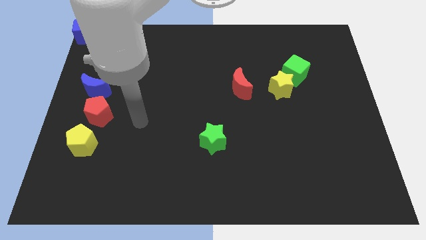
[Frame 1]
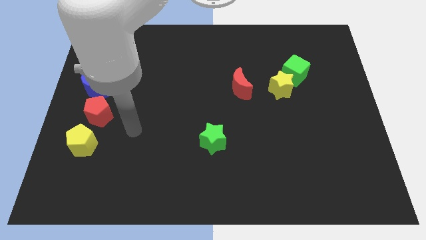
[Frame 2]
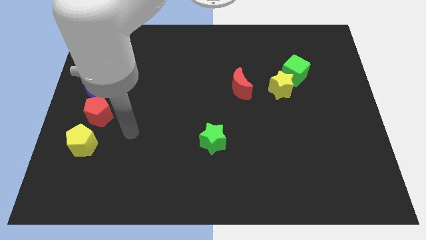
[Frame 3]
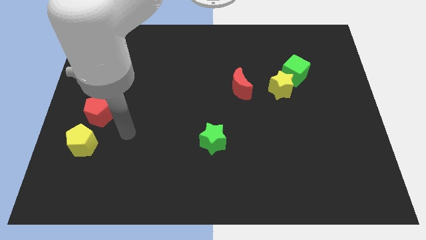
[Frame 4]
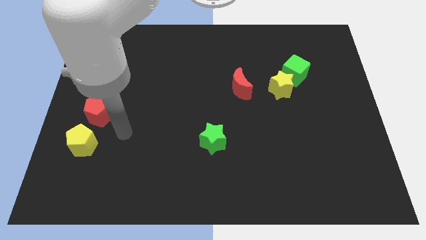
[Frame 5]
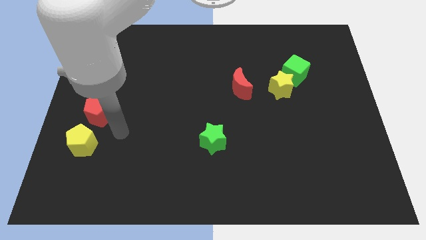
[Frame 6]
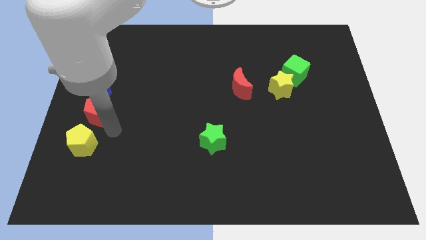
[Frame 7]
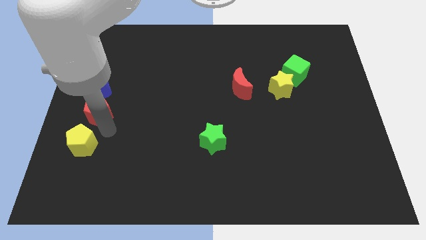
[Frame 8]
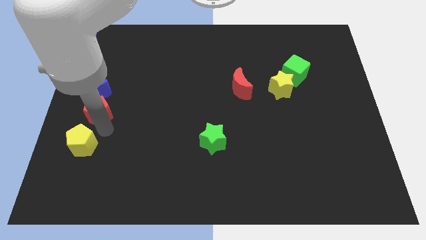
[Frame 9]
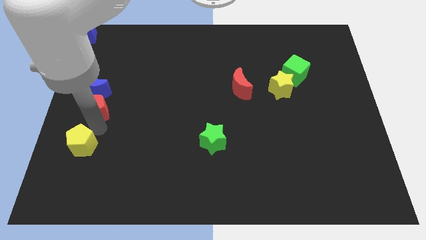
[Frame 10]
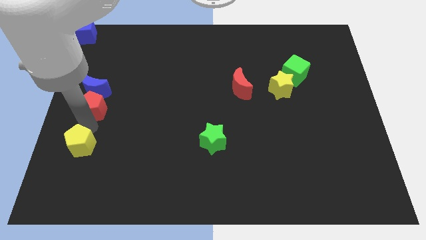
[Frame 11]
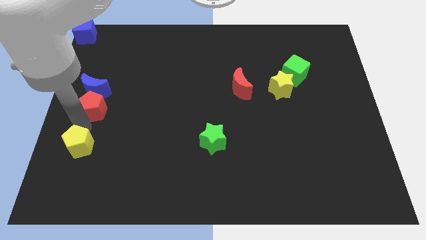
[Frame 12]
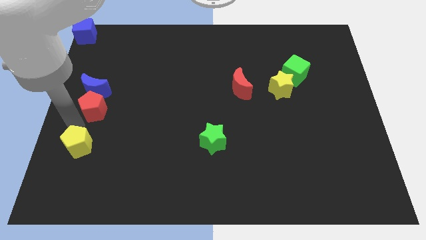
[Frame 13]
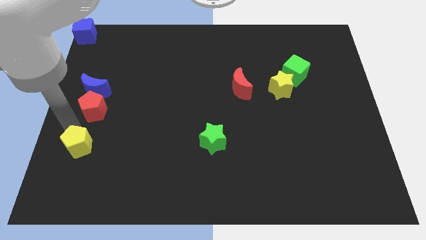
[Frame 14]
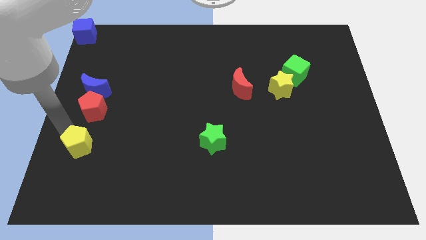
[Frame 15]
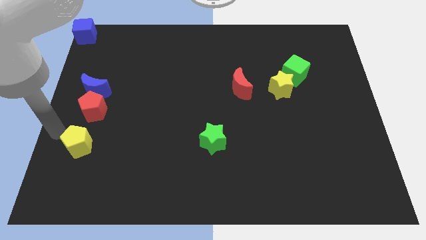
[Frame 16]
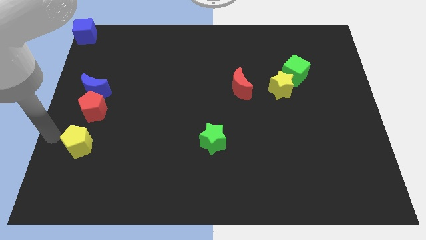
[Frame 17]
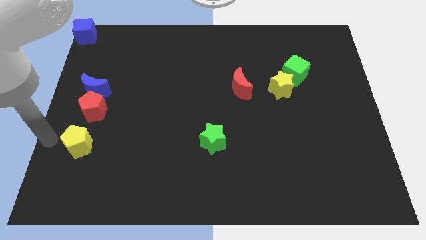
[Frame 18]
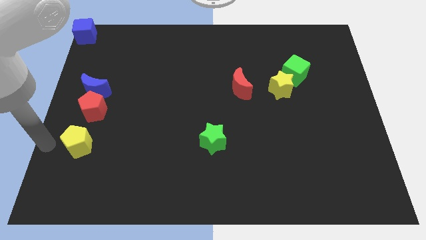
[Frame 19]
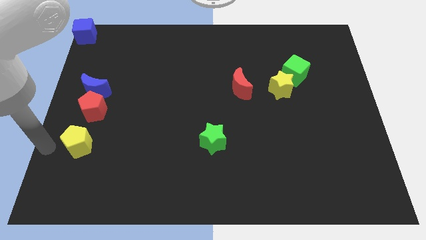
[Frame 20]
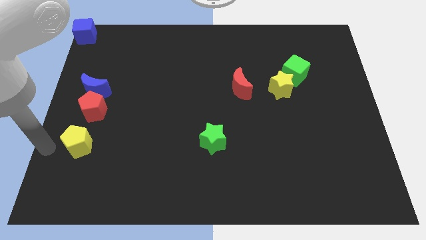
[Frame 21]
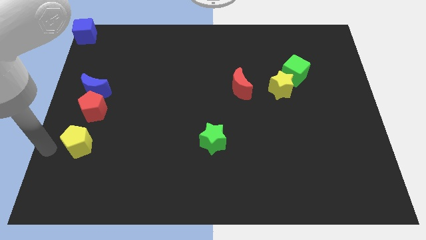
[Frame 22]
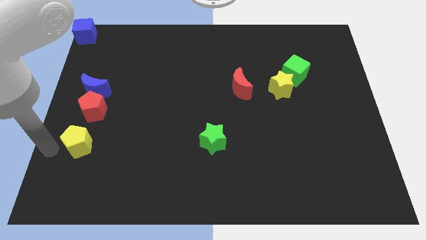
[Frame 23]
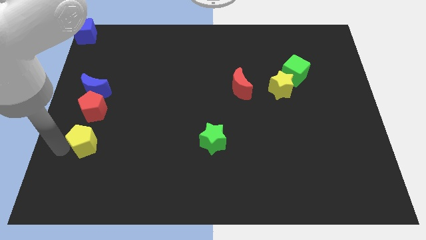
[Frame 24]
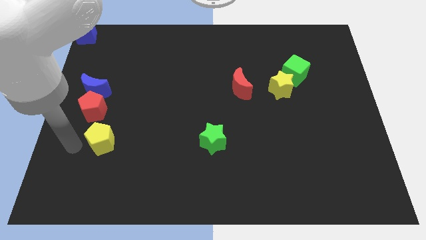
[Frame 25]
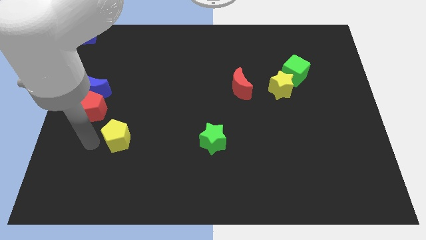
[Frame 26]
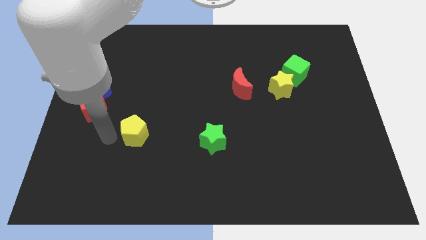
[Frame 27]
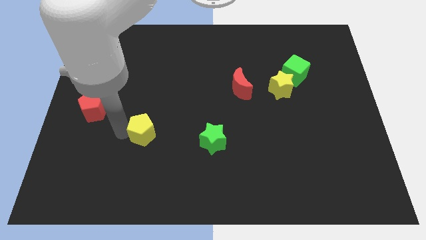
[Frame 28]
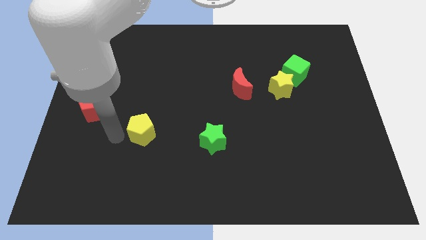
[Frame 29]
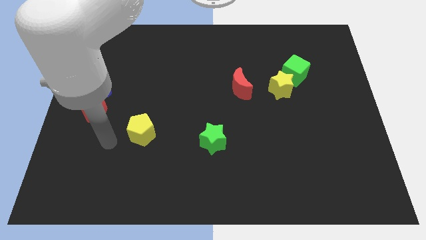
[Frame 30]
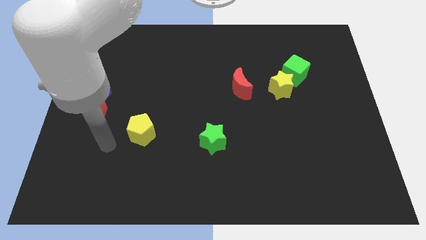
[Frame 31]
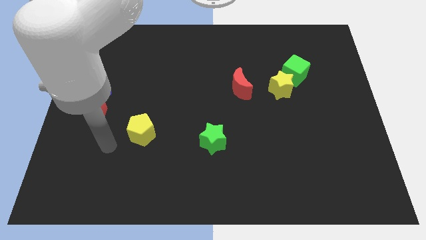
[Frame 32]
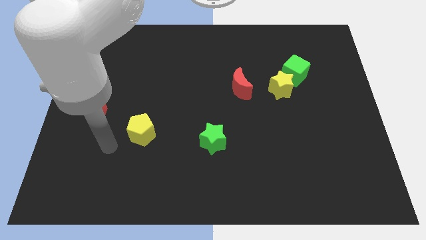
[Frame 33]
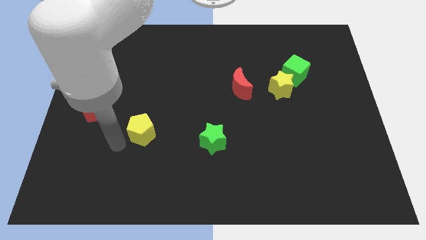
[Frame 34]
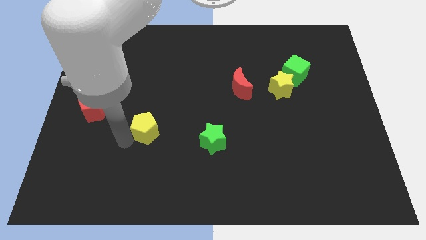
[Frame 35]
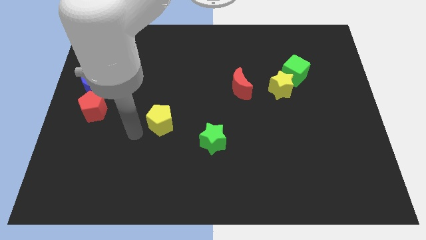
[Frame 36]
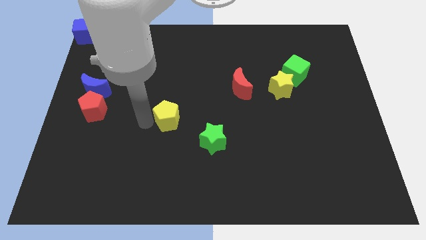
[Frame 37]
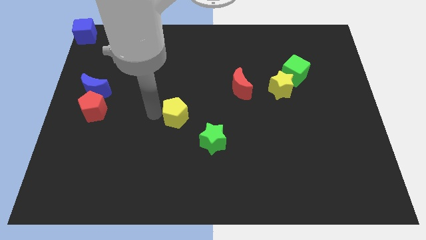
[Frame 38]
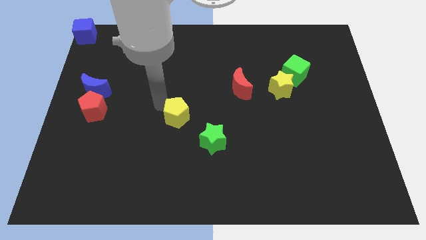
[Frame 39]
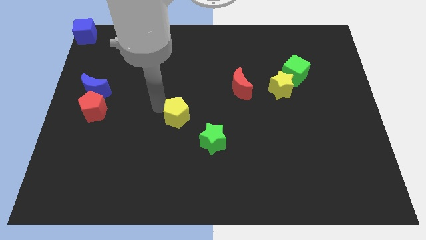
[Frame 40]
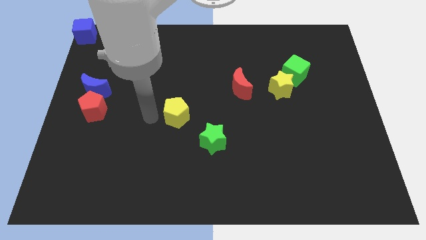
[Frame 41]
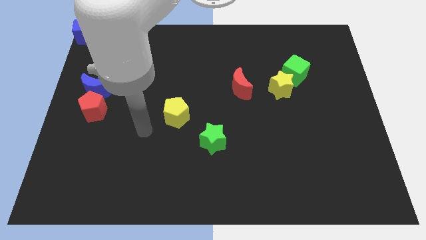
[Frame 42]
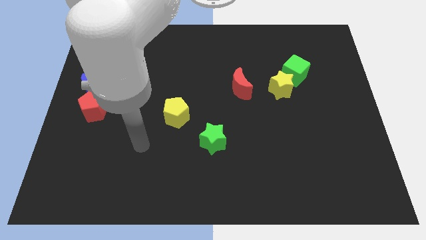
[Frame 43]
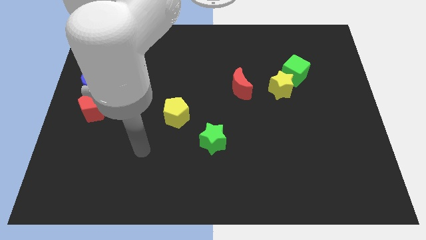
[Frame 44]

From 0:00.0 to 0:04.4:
push the yellow pentagon diagonally top left to the green star

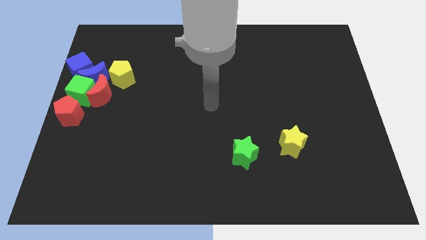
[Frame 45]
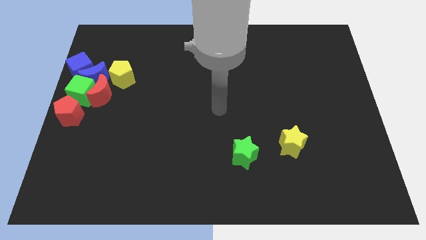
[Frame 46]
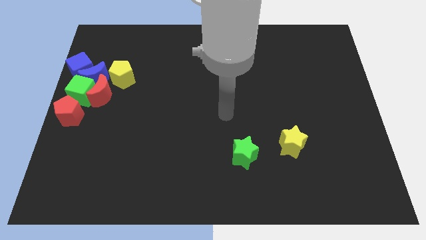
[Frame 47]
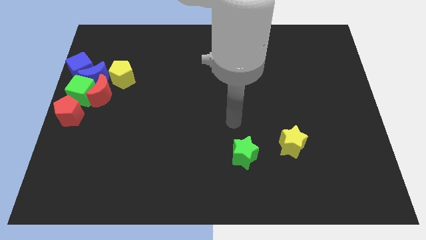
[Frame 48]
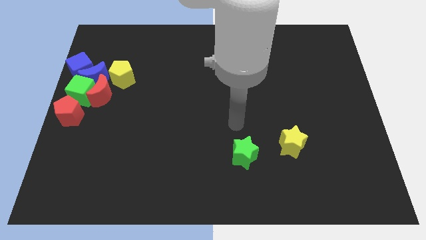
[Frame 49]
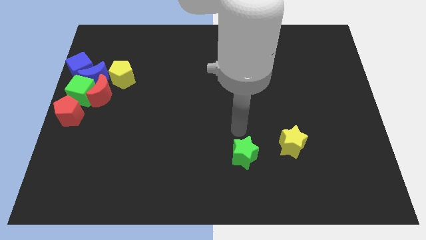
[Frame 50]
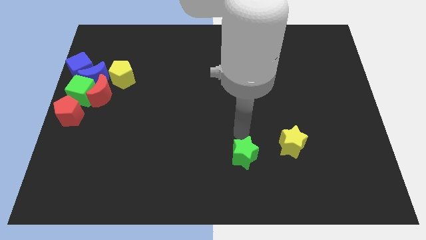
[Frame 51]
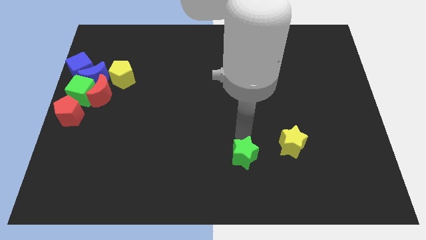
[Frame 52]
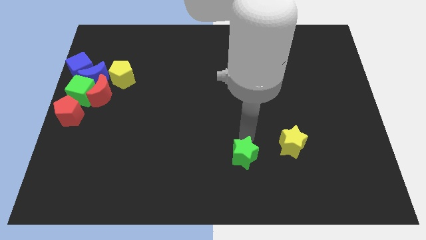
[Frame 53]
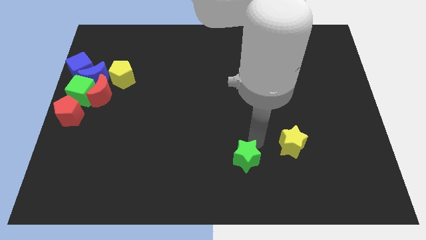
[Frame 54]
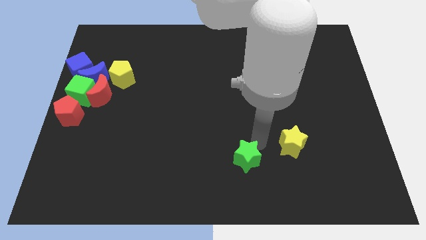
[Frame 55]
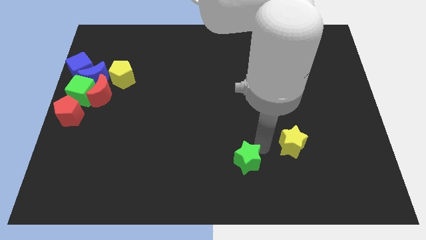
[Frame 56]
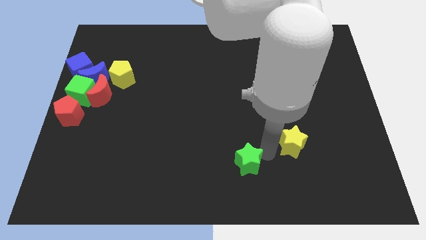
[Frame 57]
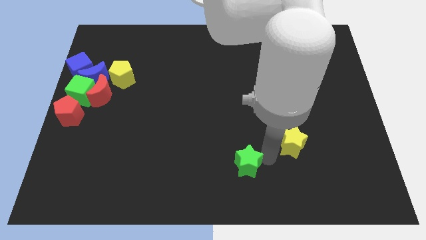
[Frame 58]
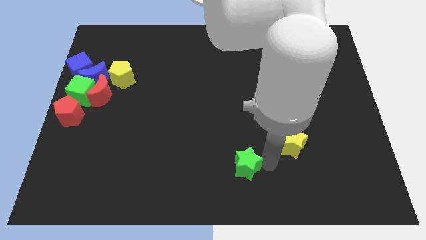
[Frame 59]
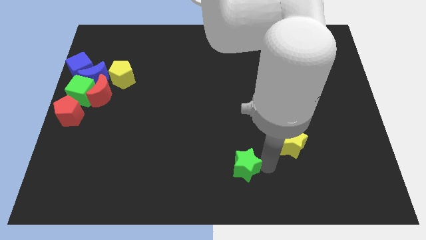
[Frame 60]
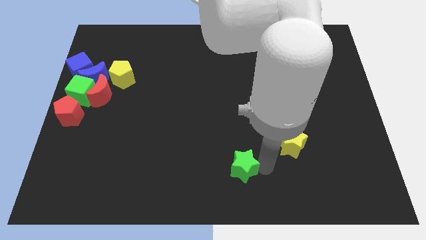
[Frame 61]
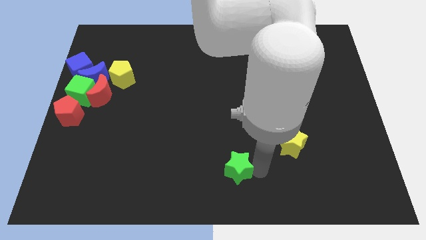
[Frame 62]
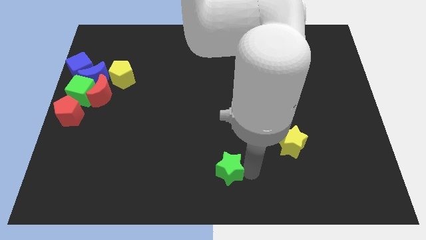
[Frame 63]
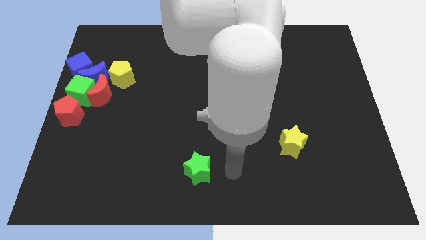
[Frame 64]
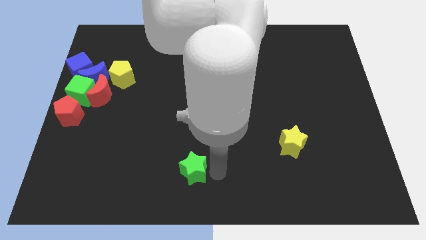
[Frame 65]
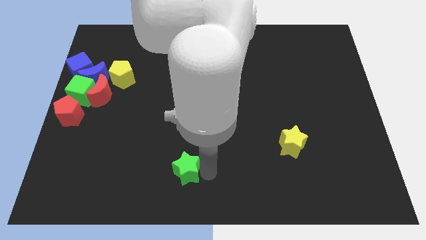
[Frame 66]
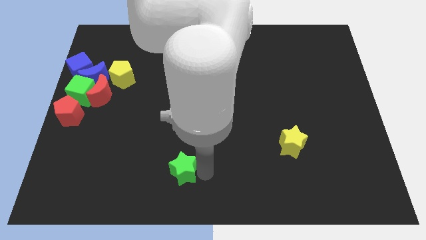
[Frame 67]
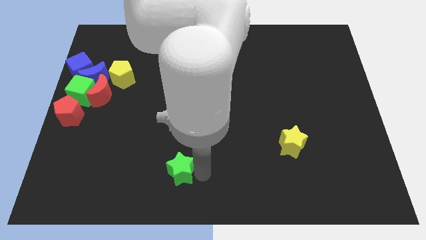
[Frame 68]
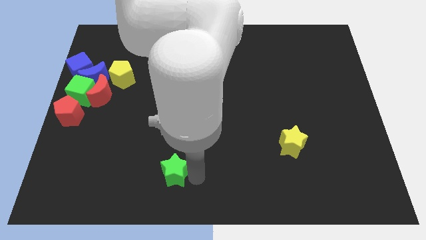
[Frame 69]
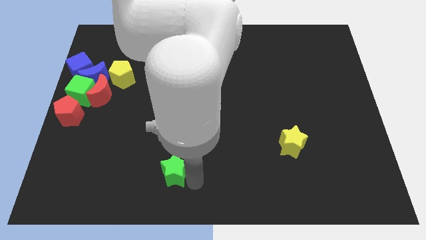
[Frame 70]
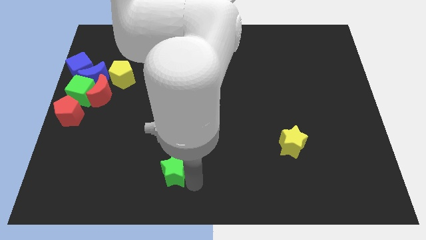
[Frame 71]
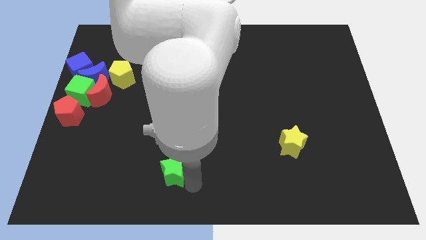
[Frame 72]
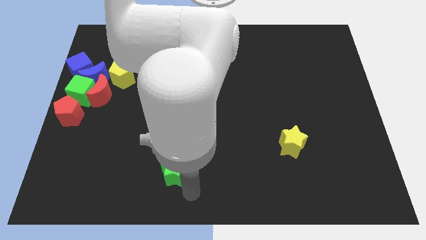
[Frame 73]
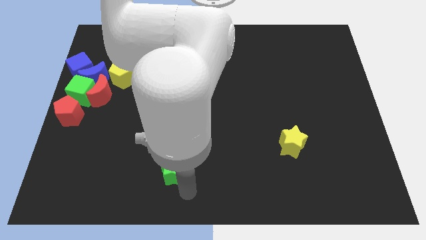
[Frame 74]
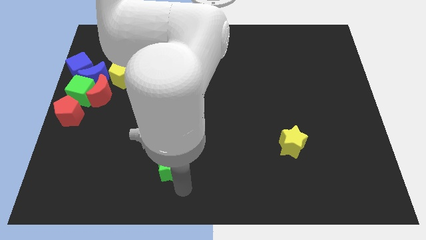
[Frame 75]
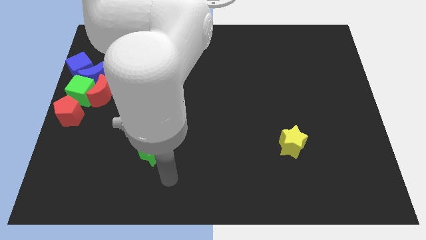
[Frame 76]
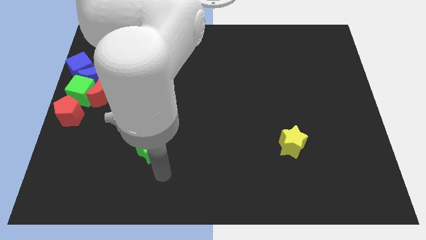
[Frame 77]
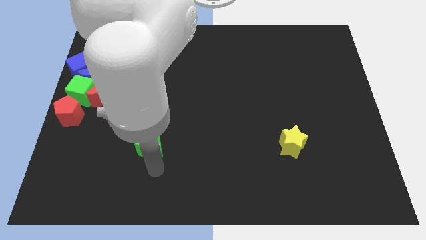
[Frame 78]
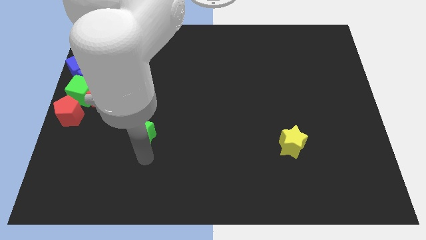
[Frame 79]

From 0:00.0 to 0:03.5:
move the green star towards the group of blocks at the left center of the board

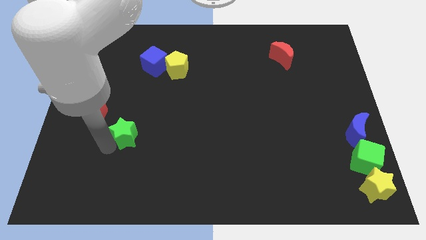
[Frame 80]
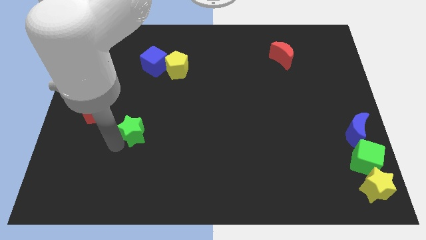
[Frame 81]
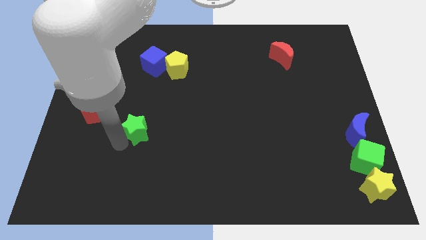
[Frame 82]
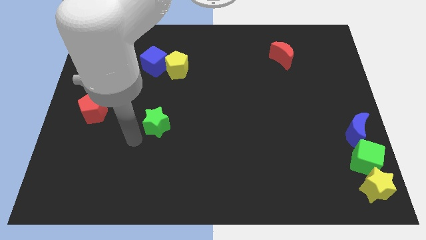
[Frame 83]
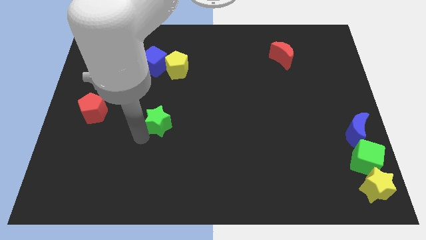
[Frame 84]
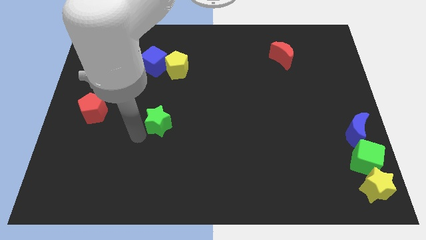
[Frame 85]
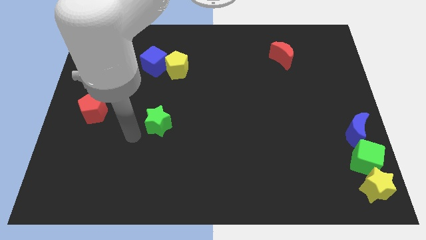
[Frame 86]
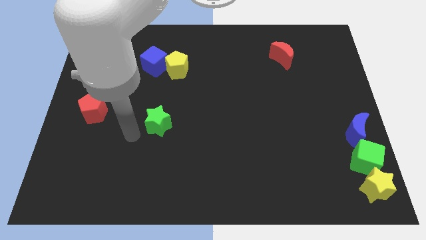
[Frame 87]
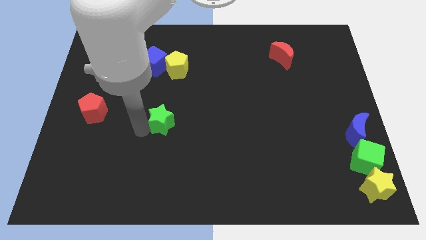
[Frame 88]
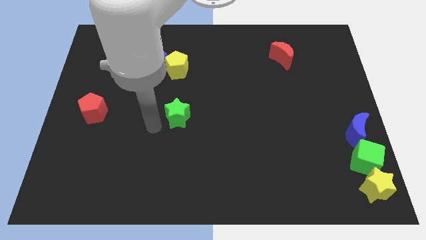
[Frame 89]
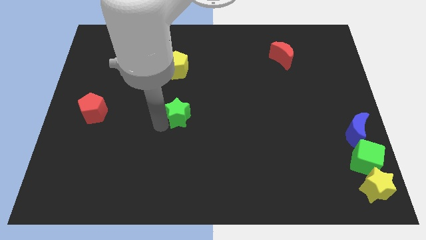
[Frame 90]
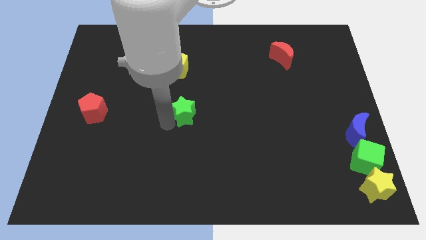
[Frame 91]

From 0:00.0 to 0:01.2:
place green star vertical to yellow pentagon
